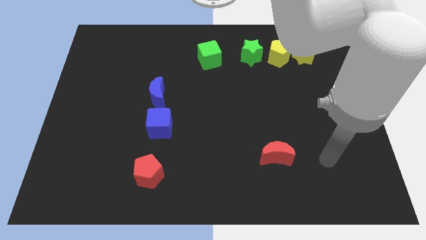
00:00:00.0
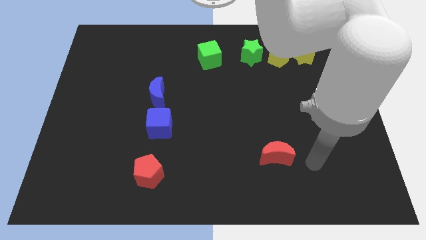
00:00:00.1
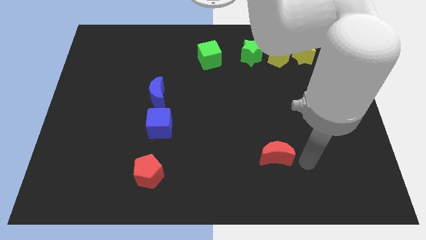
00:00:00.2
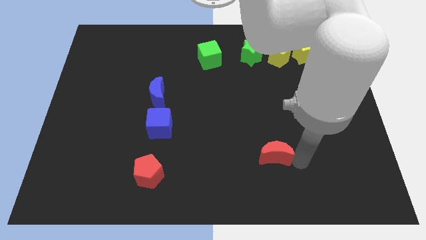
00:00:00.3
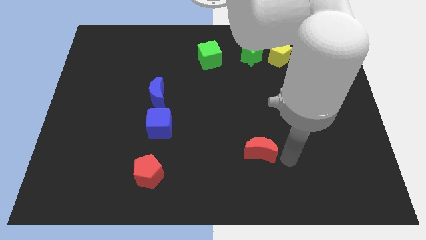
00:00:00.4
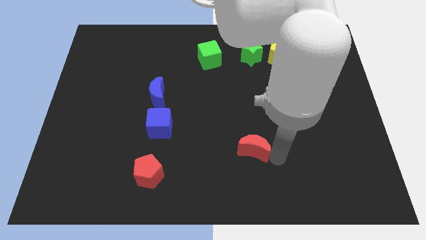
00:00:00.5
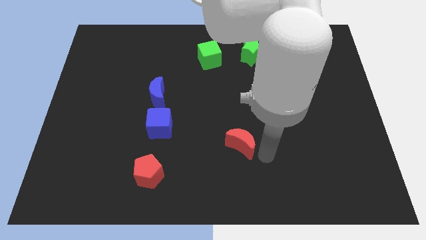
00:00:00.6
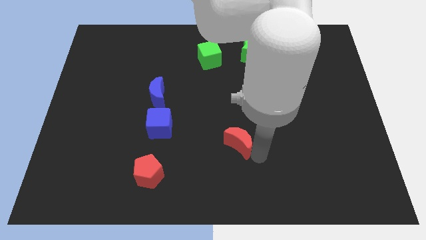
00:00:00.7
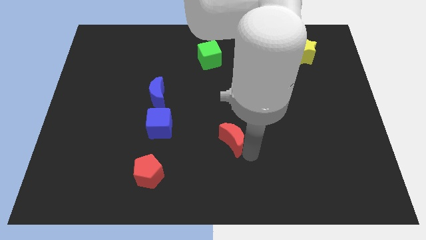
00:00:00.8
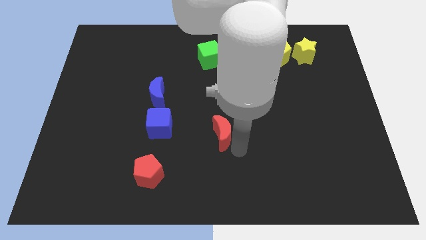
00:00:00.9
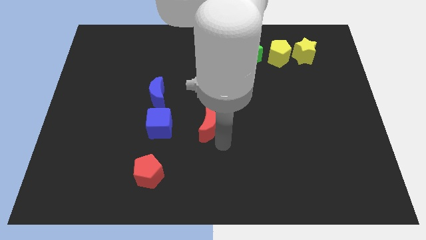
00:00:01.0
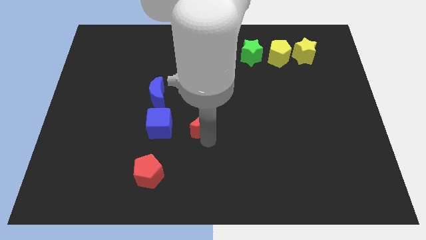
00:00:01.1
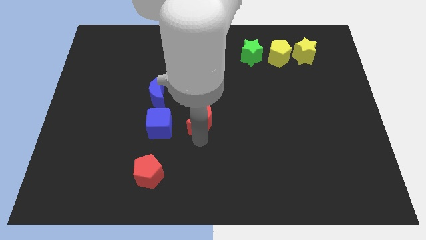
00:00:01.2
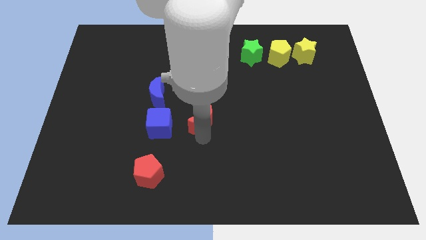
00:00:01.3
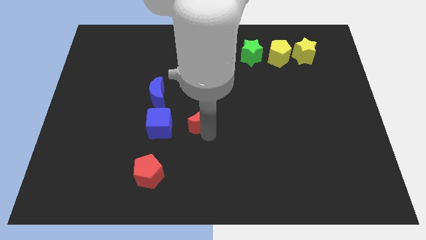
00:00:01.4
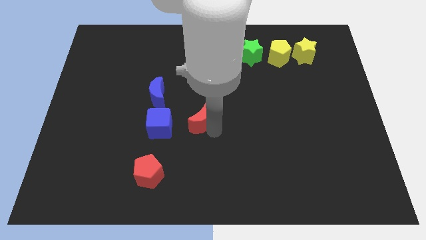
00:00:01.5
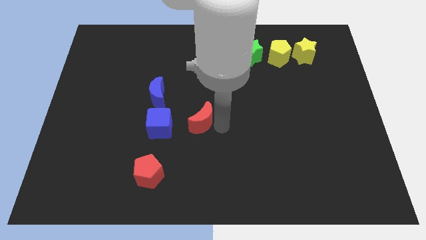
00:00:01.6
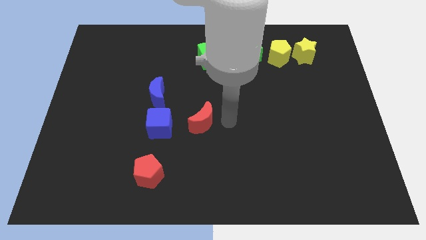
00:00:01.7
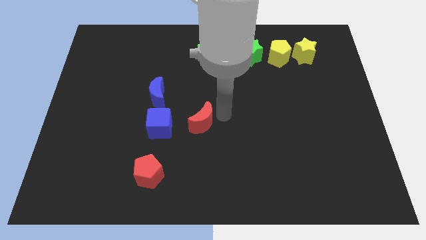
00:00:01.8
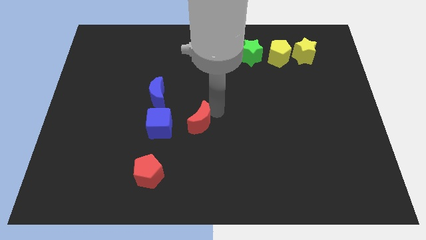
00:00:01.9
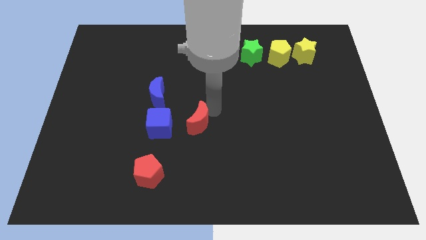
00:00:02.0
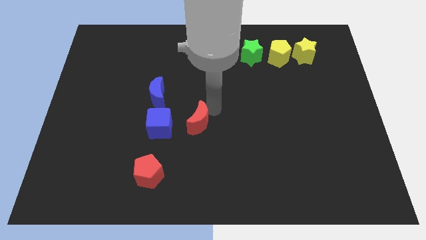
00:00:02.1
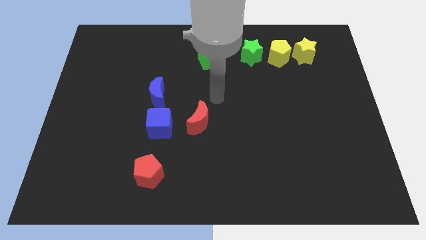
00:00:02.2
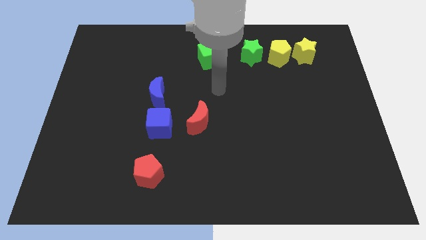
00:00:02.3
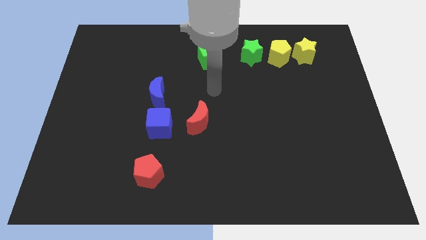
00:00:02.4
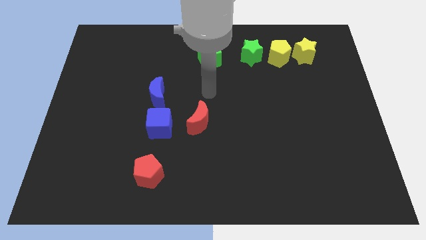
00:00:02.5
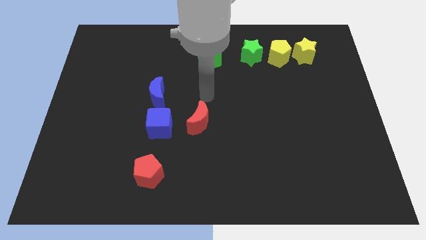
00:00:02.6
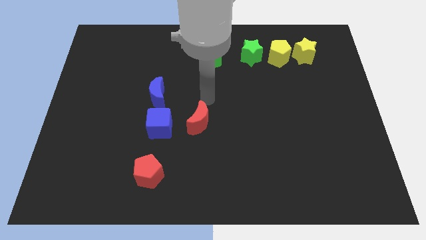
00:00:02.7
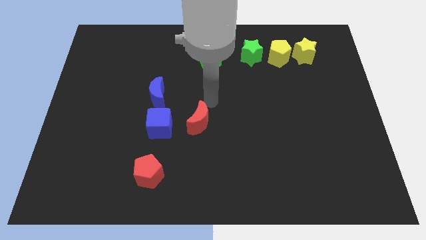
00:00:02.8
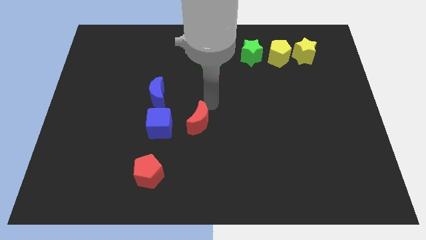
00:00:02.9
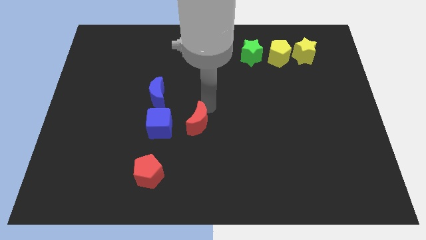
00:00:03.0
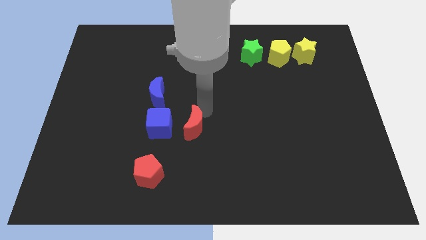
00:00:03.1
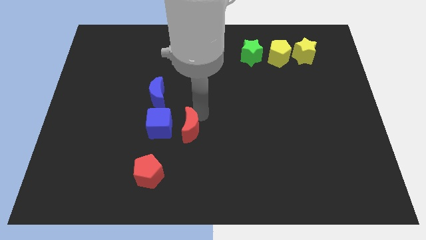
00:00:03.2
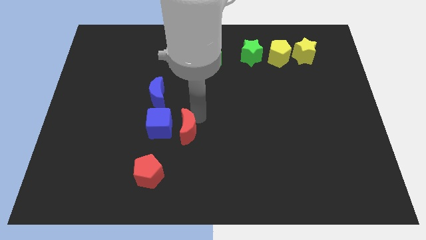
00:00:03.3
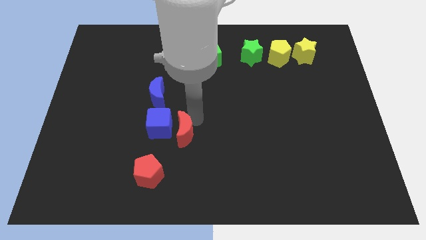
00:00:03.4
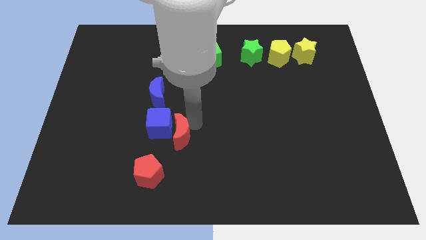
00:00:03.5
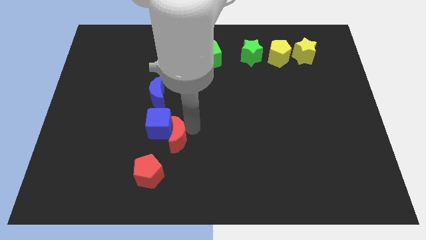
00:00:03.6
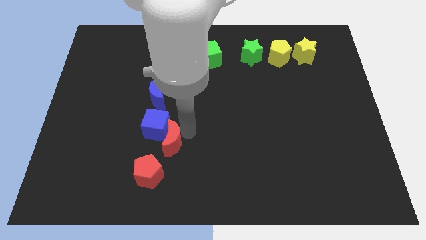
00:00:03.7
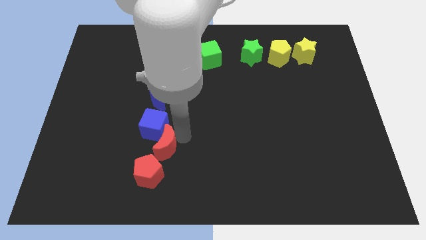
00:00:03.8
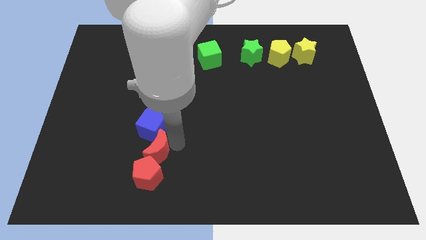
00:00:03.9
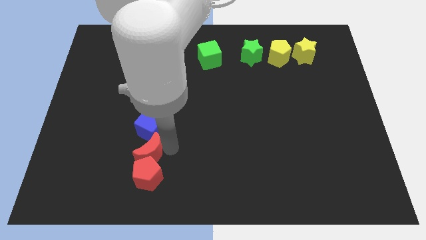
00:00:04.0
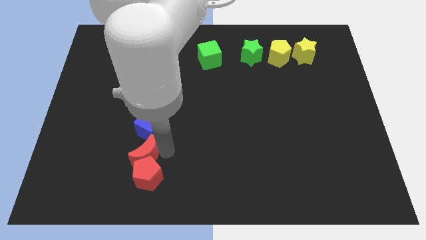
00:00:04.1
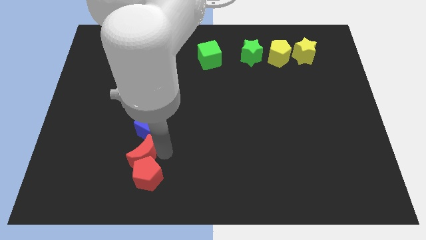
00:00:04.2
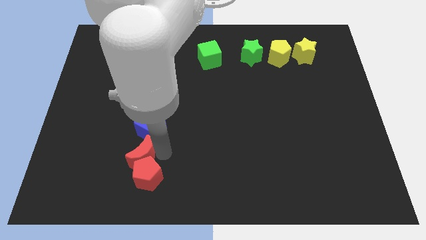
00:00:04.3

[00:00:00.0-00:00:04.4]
push the red moon block into the red pentagon

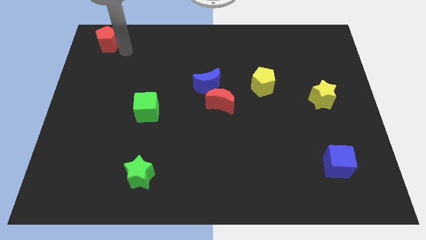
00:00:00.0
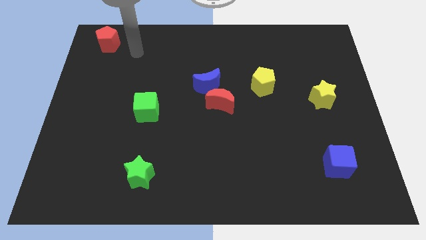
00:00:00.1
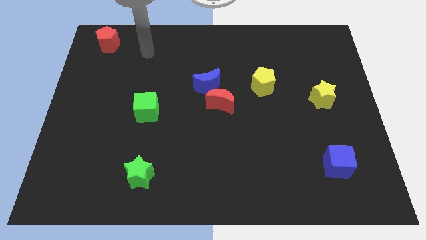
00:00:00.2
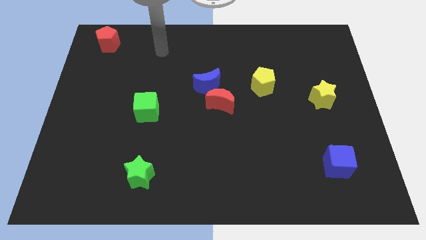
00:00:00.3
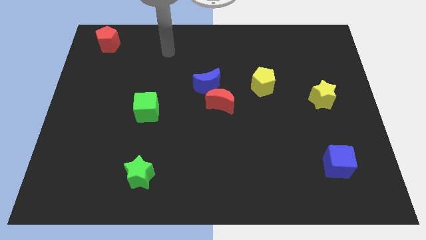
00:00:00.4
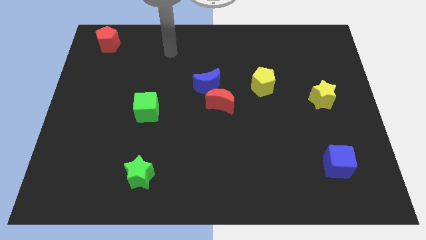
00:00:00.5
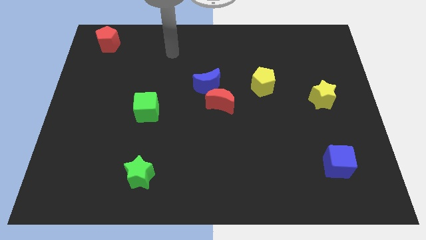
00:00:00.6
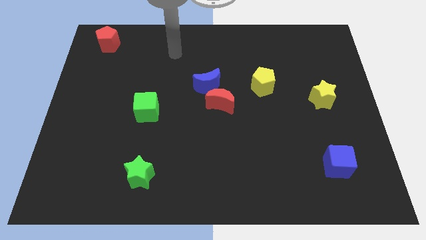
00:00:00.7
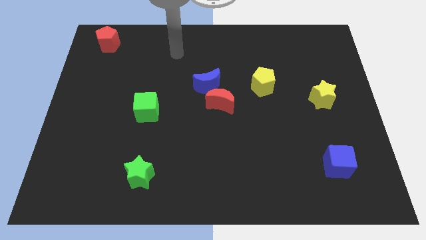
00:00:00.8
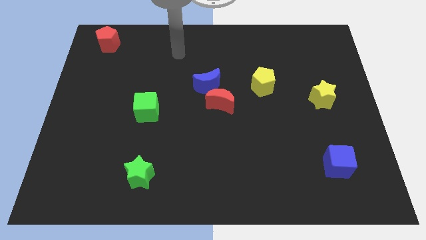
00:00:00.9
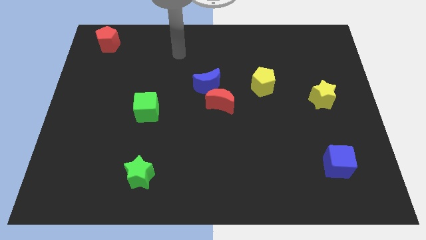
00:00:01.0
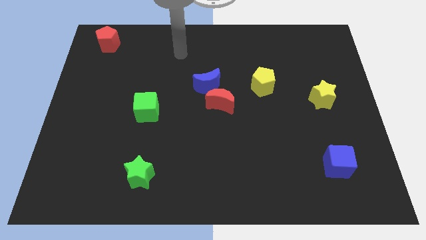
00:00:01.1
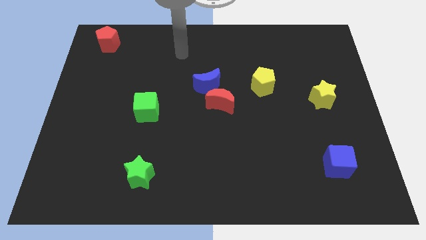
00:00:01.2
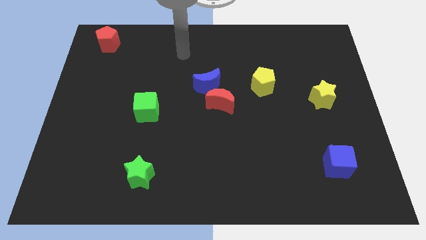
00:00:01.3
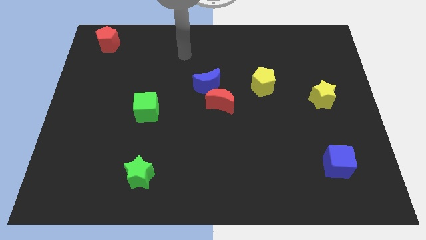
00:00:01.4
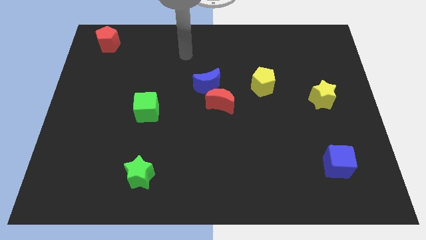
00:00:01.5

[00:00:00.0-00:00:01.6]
move your arm away from red pentagon

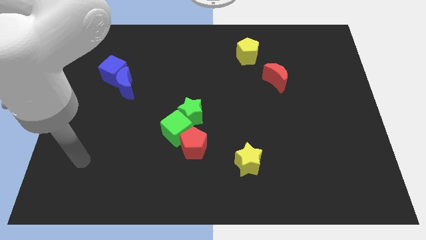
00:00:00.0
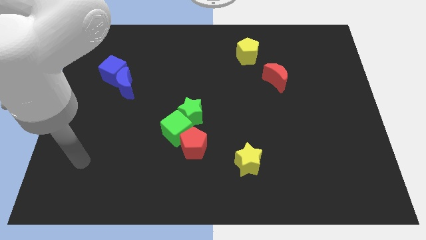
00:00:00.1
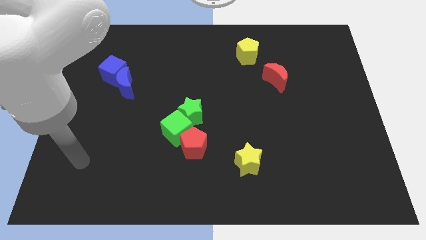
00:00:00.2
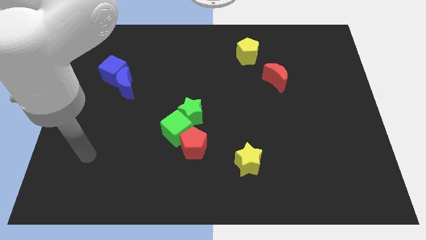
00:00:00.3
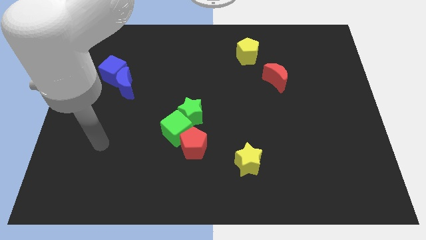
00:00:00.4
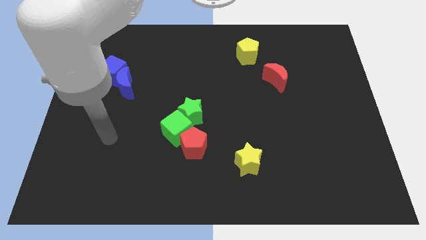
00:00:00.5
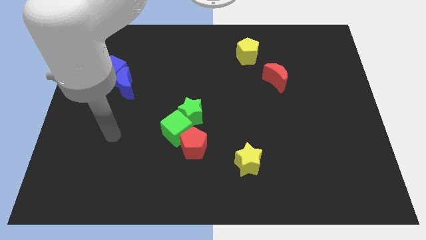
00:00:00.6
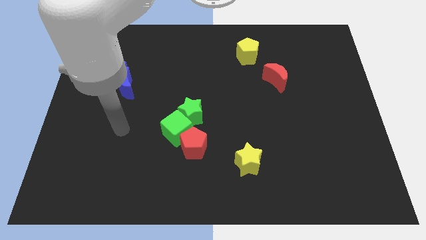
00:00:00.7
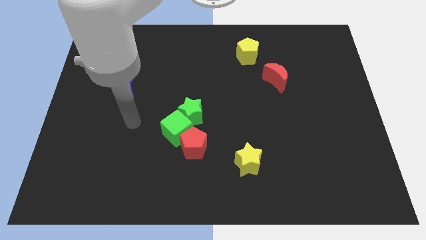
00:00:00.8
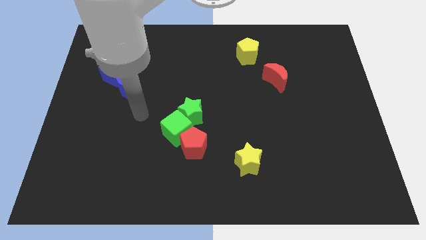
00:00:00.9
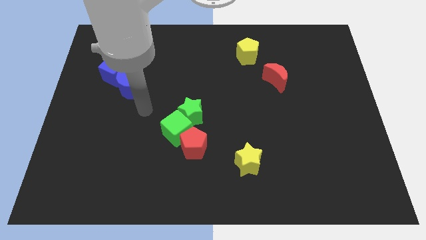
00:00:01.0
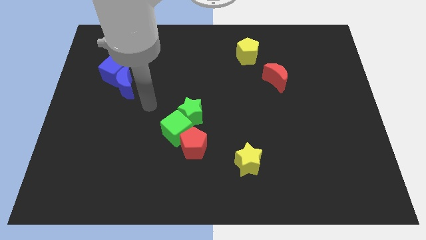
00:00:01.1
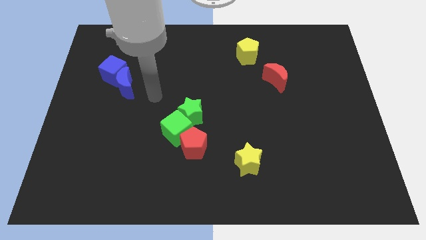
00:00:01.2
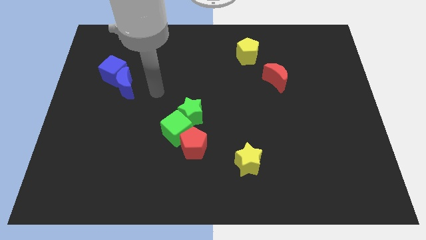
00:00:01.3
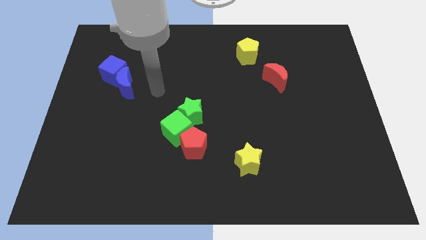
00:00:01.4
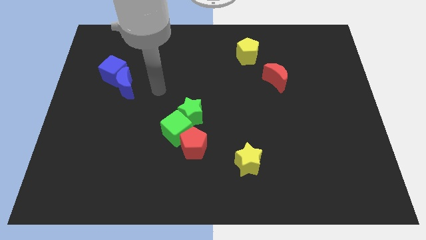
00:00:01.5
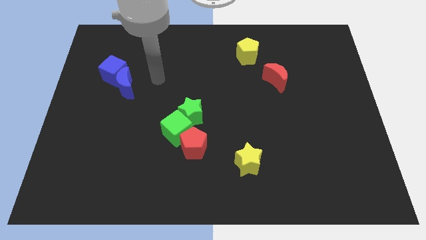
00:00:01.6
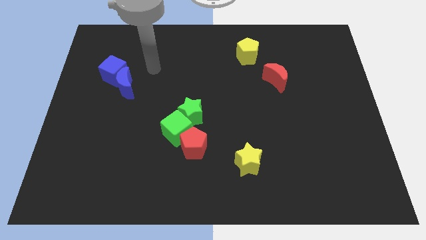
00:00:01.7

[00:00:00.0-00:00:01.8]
move your arm to the right side of the blue moon

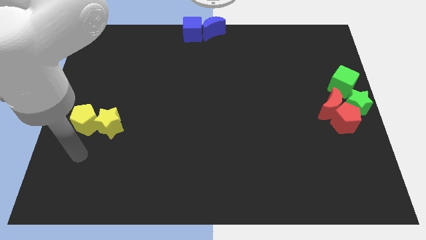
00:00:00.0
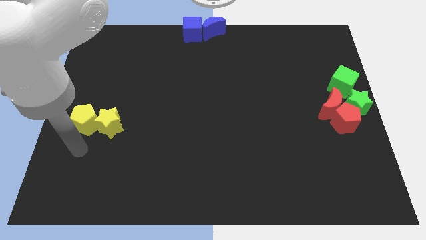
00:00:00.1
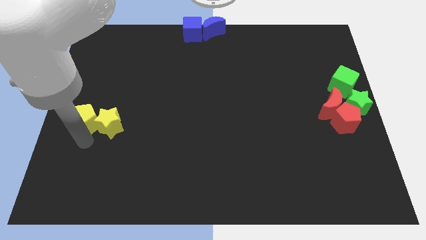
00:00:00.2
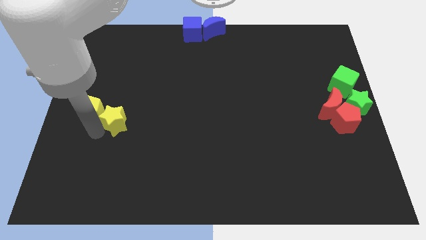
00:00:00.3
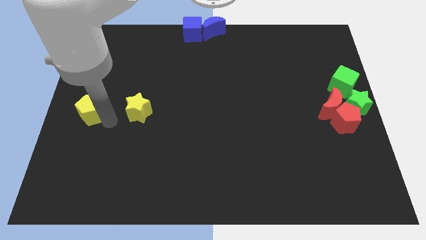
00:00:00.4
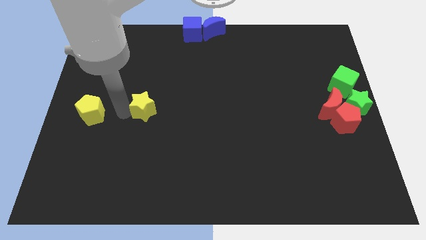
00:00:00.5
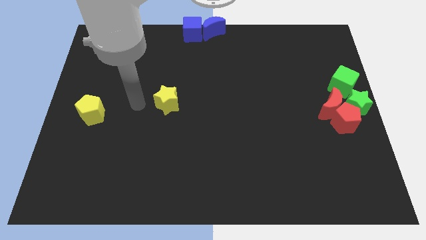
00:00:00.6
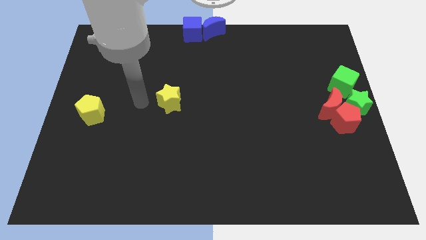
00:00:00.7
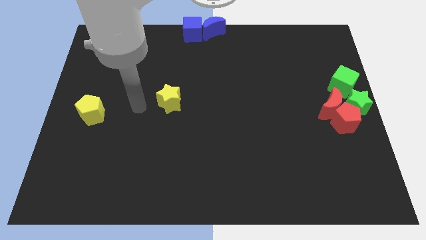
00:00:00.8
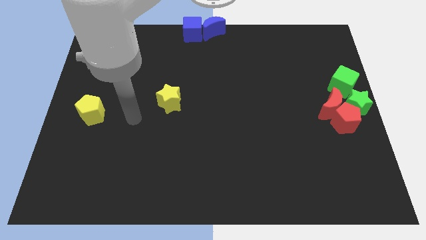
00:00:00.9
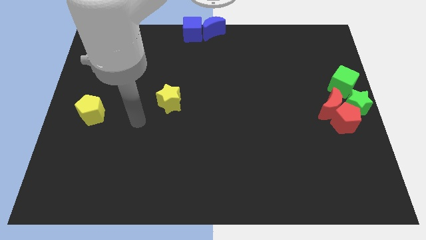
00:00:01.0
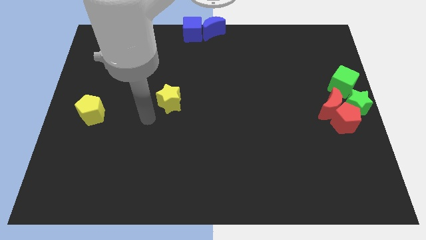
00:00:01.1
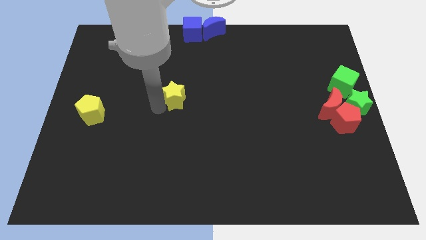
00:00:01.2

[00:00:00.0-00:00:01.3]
move yellow star away from the yellow pentagon
